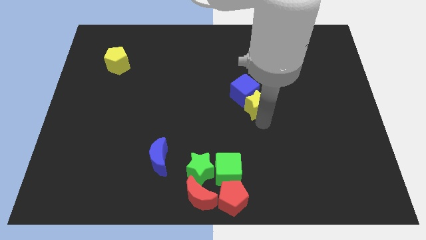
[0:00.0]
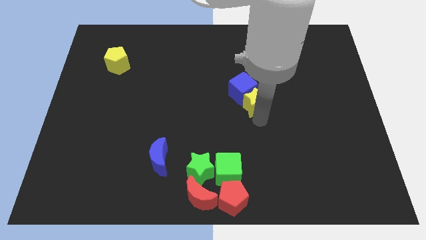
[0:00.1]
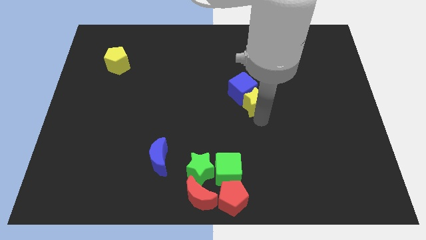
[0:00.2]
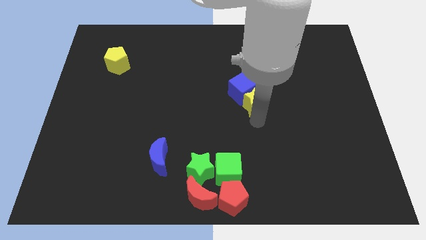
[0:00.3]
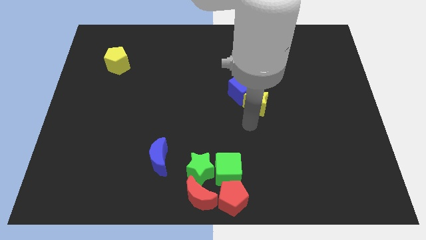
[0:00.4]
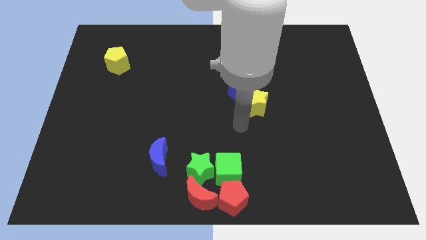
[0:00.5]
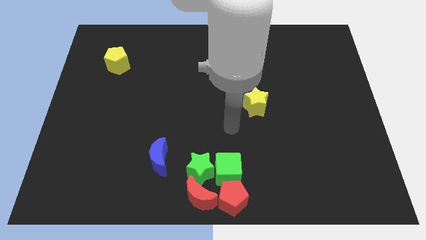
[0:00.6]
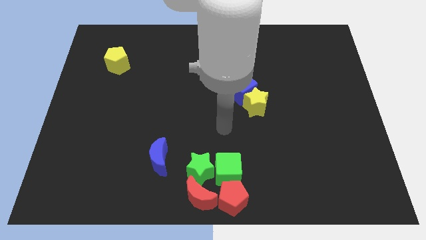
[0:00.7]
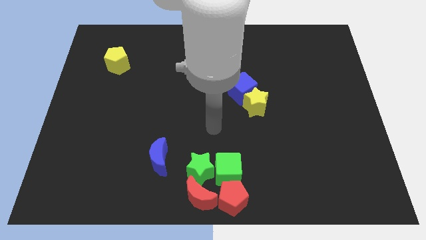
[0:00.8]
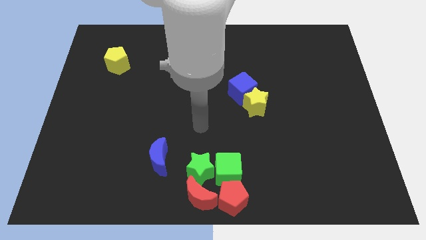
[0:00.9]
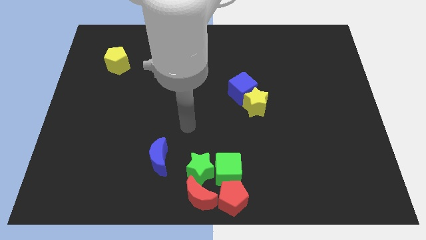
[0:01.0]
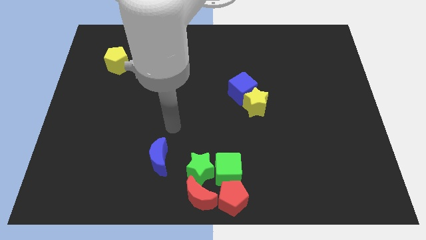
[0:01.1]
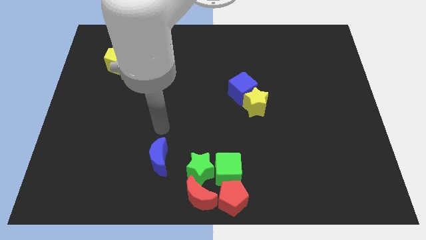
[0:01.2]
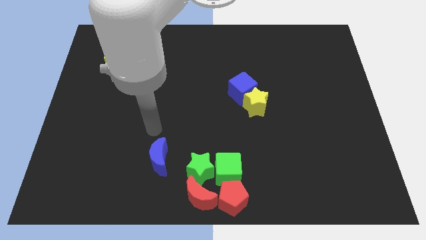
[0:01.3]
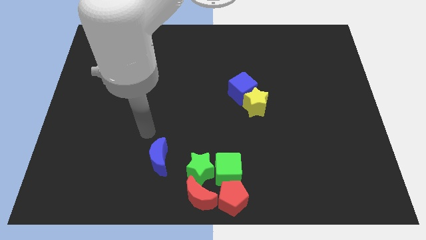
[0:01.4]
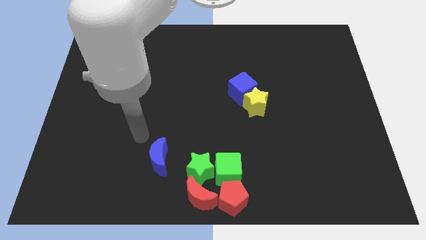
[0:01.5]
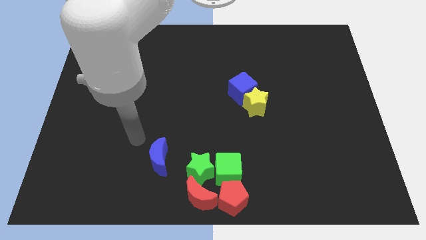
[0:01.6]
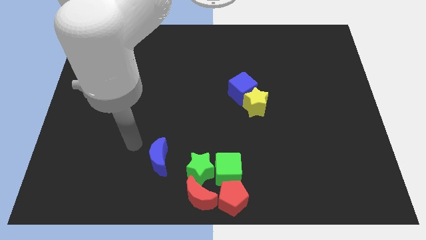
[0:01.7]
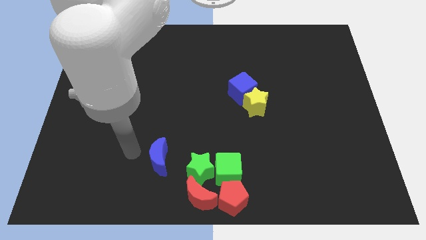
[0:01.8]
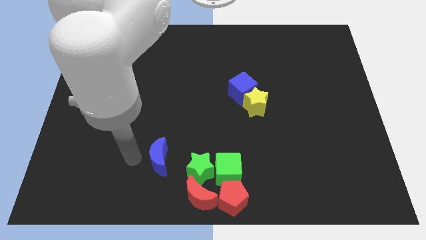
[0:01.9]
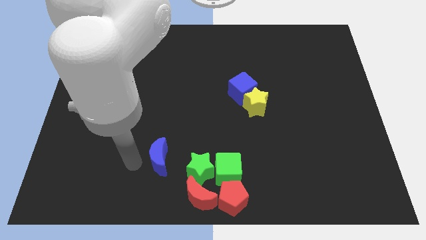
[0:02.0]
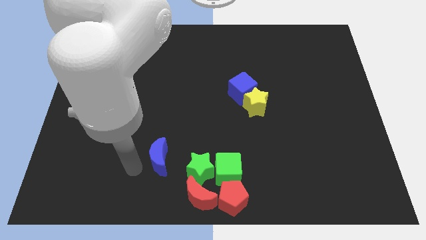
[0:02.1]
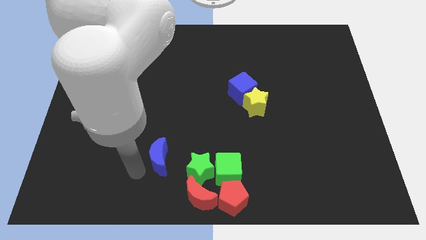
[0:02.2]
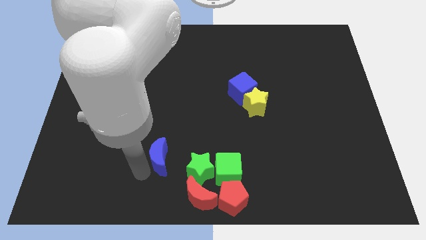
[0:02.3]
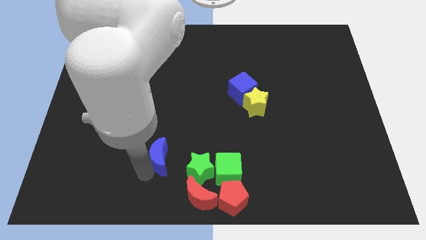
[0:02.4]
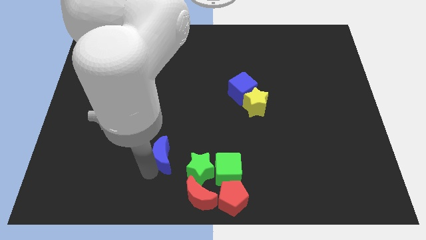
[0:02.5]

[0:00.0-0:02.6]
move your arm at the left side of the blue moon

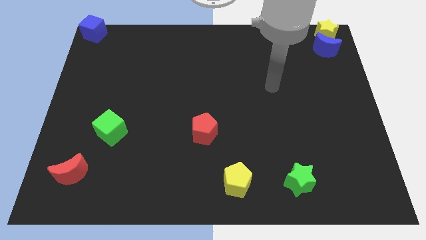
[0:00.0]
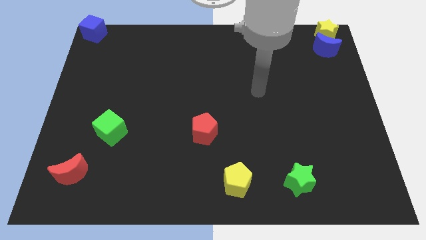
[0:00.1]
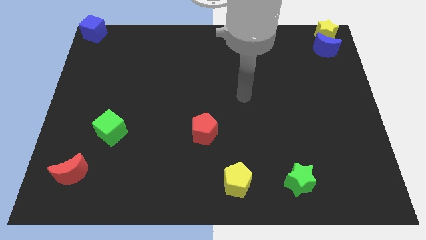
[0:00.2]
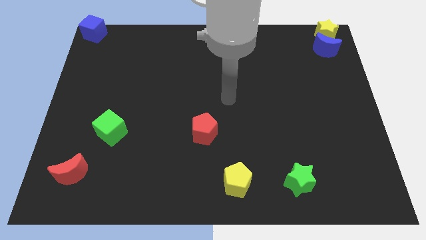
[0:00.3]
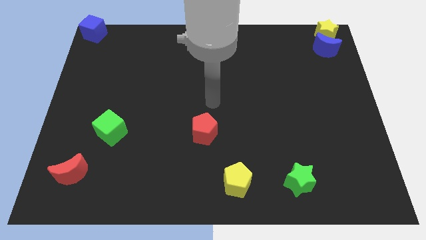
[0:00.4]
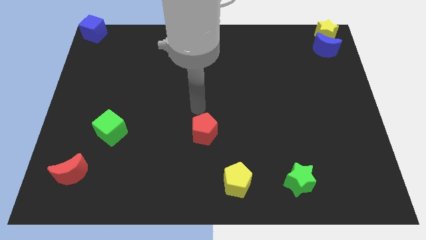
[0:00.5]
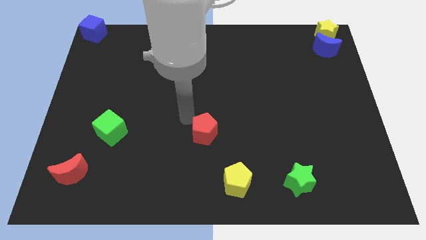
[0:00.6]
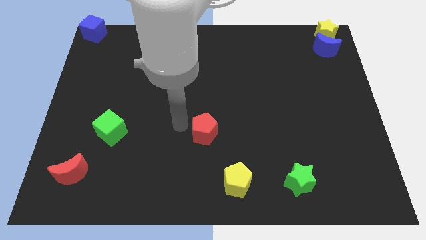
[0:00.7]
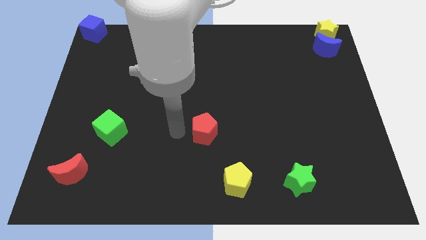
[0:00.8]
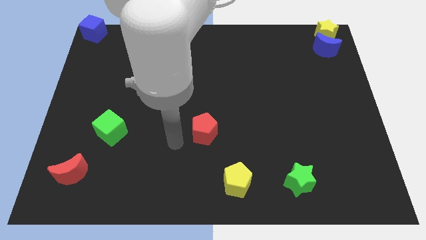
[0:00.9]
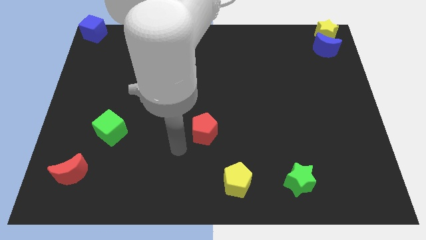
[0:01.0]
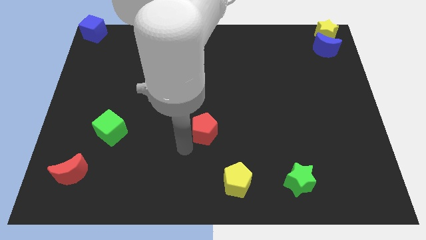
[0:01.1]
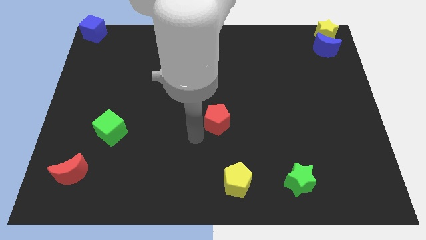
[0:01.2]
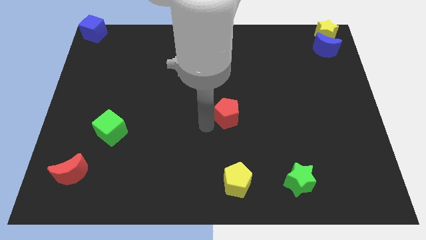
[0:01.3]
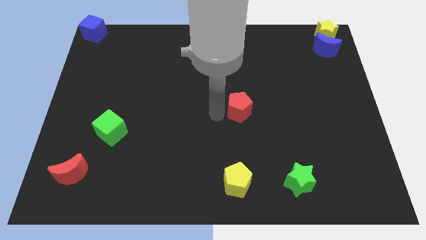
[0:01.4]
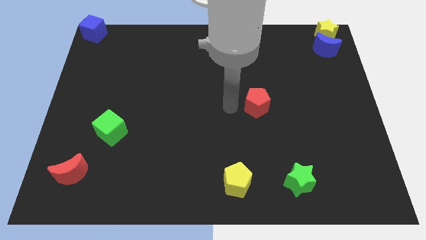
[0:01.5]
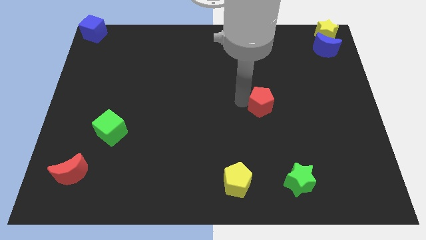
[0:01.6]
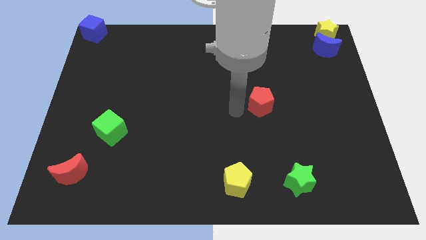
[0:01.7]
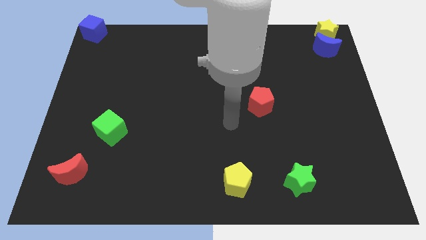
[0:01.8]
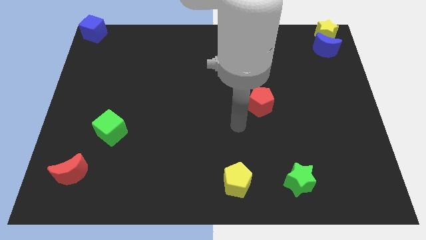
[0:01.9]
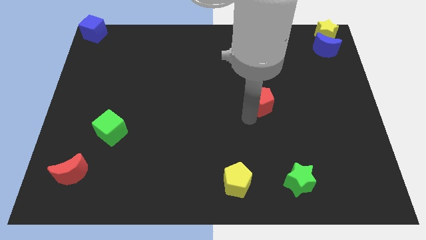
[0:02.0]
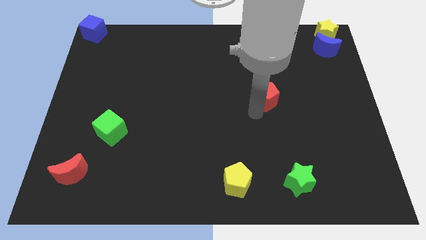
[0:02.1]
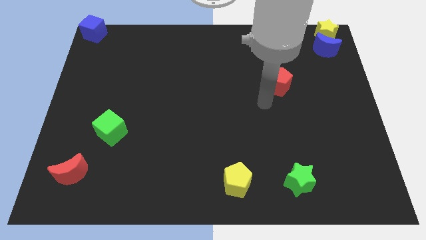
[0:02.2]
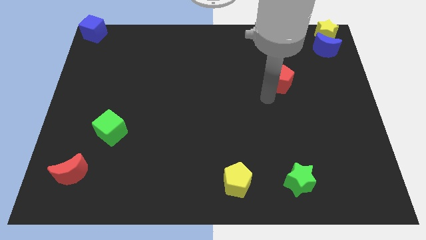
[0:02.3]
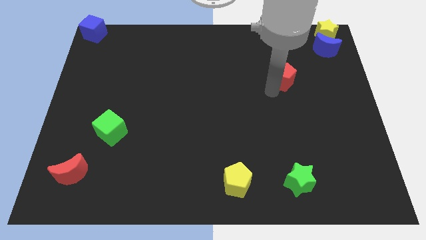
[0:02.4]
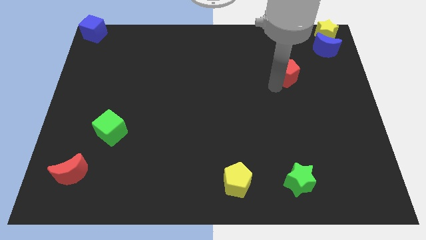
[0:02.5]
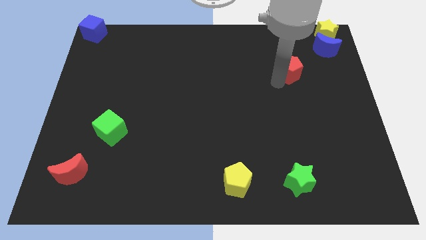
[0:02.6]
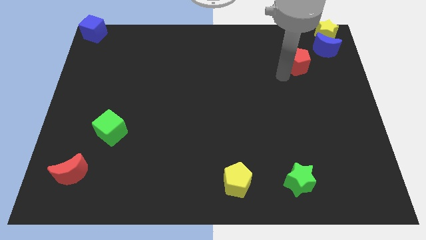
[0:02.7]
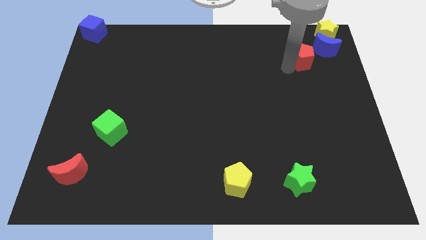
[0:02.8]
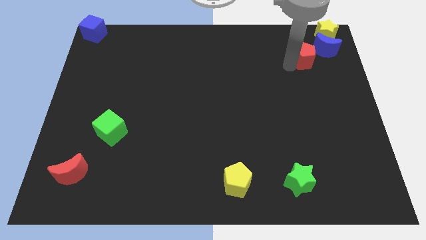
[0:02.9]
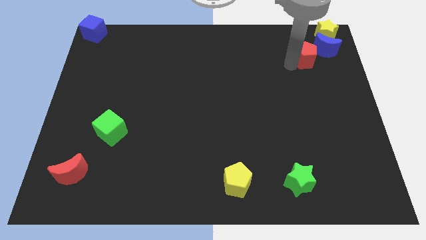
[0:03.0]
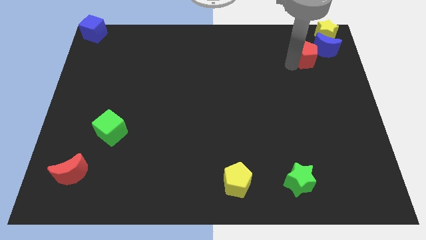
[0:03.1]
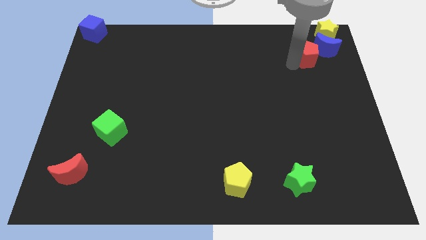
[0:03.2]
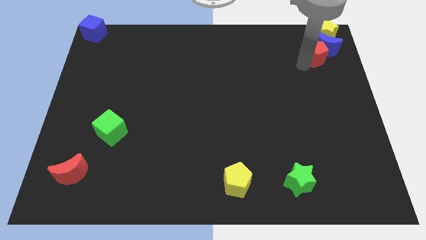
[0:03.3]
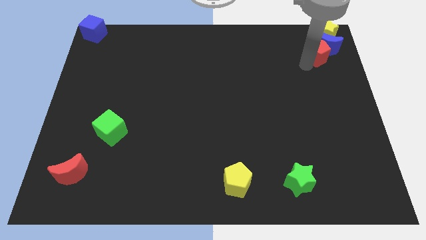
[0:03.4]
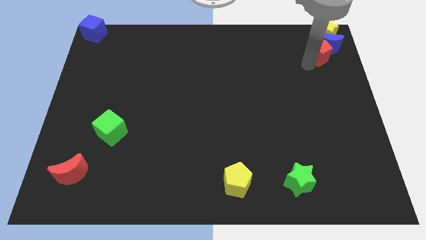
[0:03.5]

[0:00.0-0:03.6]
push the red pentagon into the blue cube

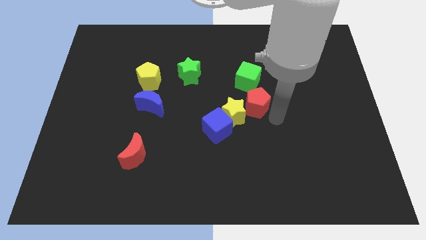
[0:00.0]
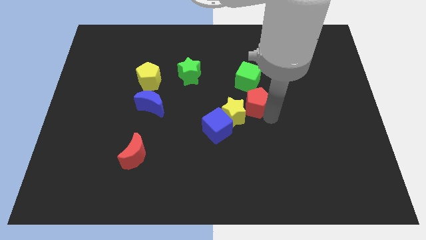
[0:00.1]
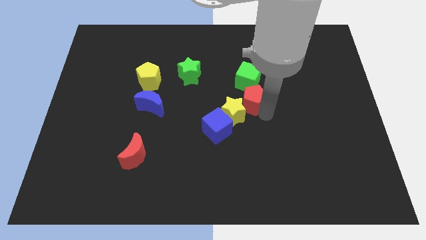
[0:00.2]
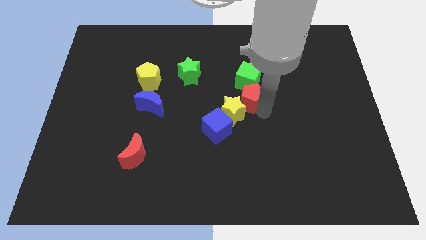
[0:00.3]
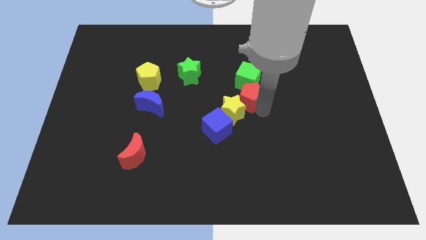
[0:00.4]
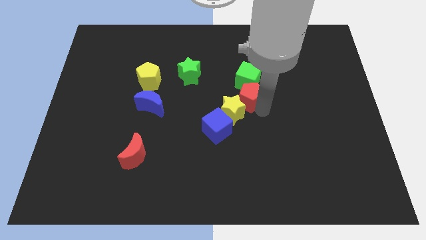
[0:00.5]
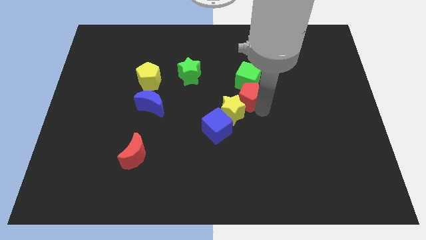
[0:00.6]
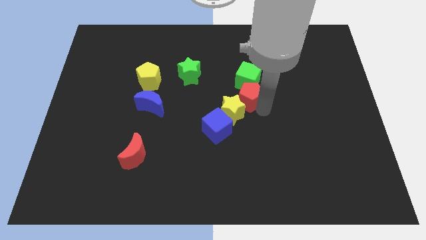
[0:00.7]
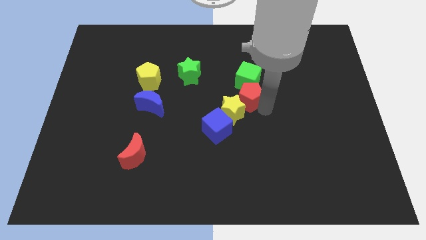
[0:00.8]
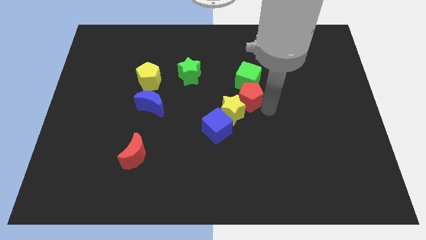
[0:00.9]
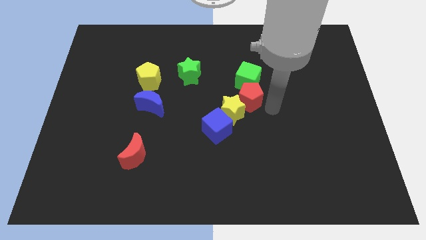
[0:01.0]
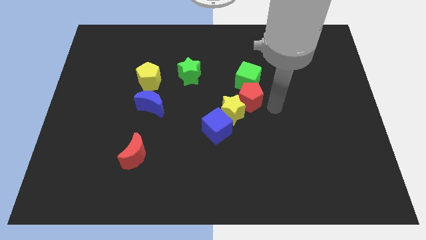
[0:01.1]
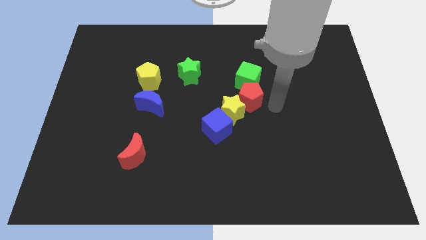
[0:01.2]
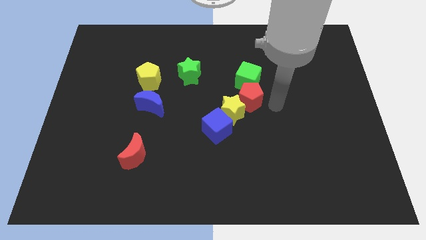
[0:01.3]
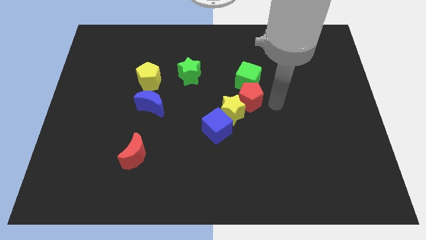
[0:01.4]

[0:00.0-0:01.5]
move the red pentagon slightly left

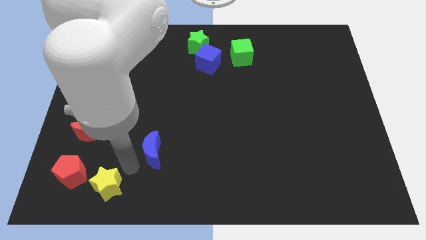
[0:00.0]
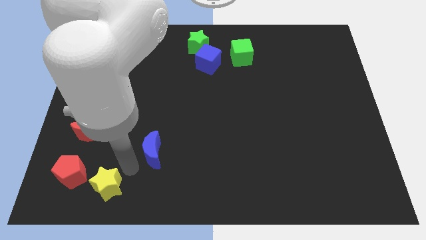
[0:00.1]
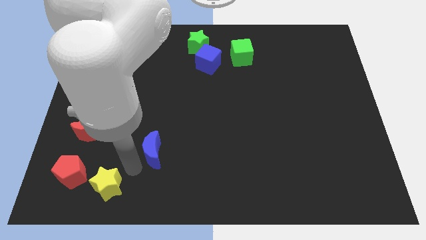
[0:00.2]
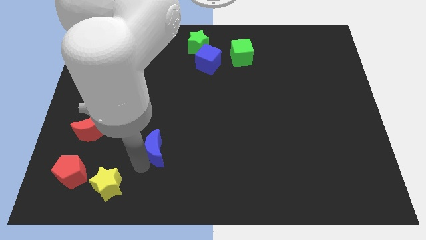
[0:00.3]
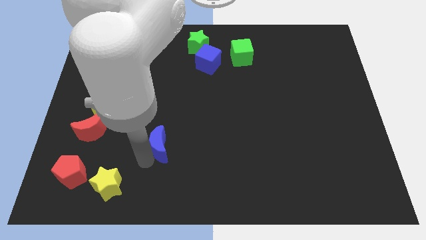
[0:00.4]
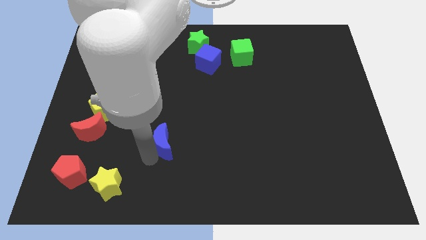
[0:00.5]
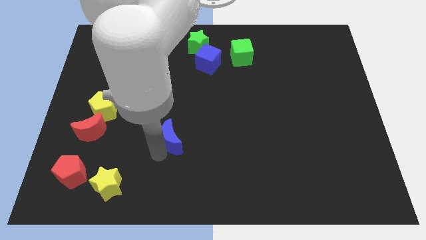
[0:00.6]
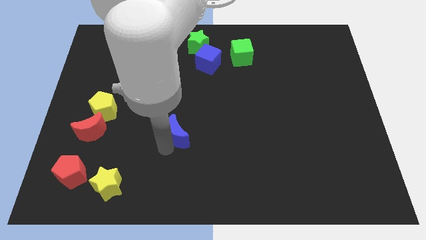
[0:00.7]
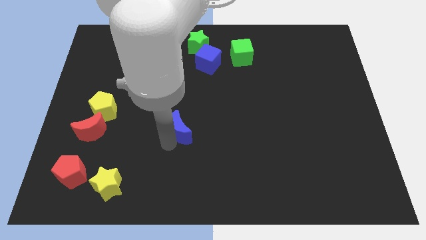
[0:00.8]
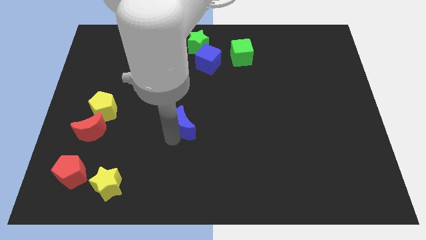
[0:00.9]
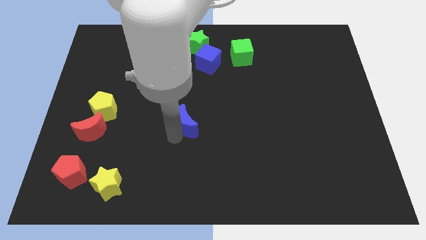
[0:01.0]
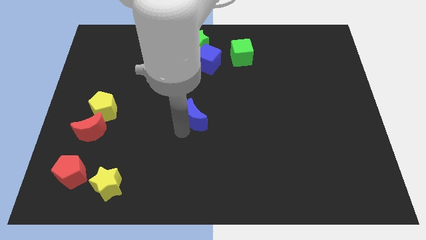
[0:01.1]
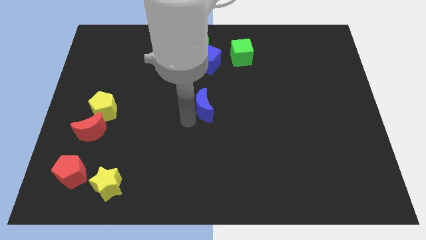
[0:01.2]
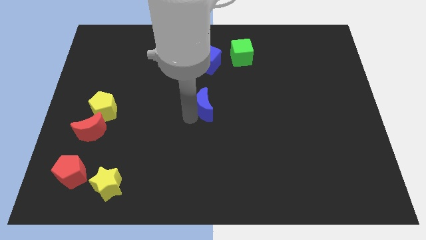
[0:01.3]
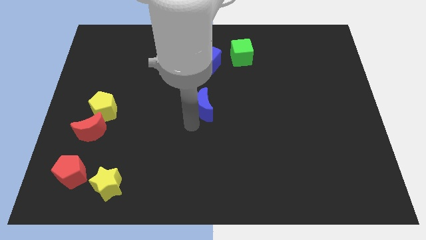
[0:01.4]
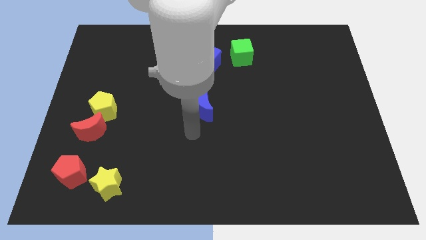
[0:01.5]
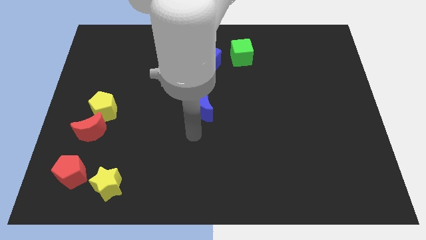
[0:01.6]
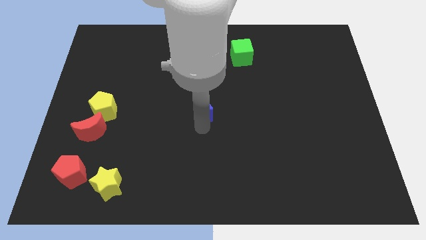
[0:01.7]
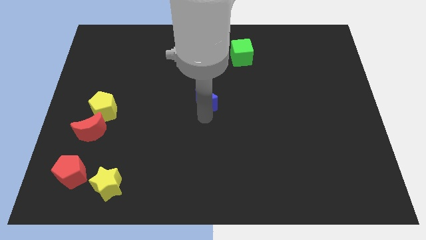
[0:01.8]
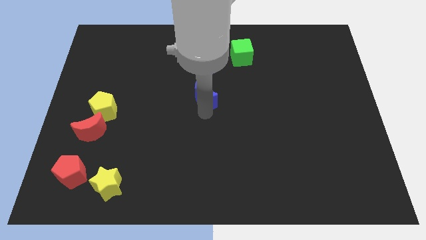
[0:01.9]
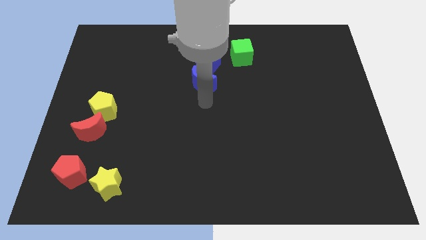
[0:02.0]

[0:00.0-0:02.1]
push the blue moon below the blue cube
